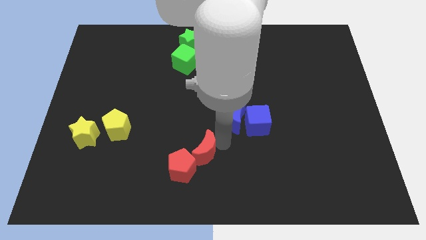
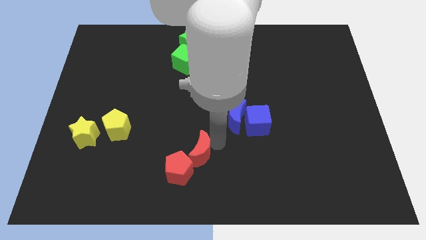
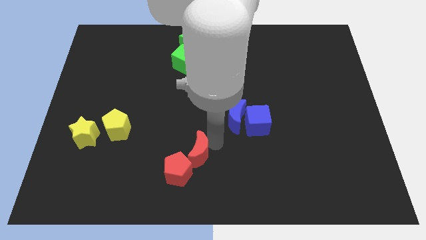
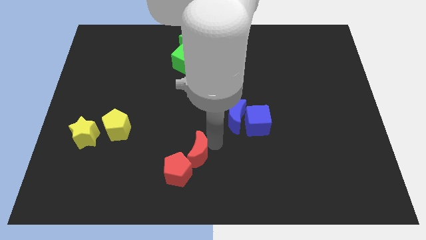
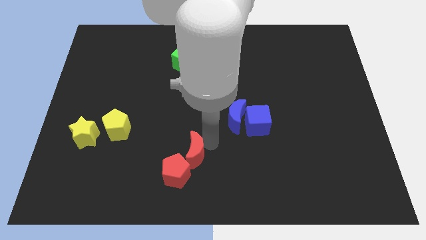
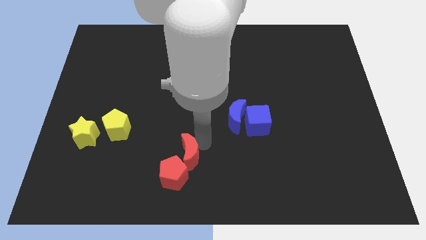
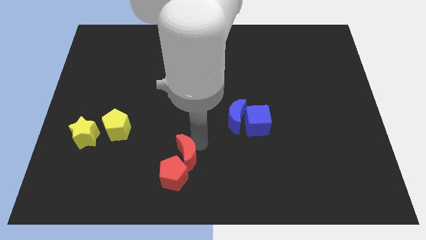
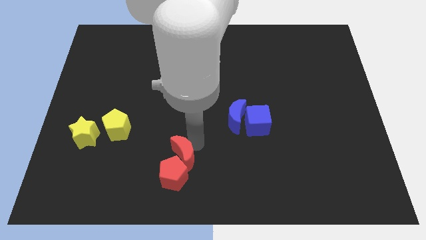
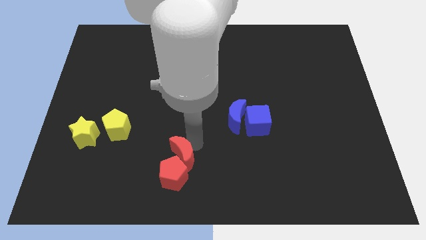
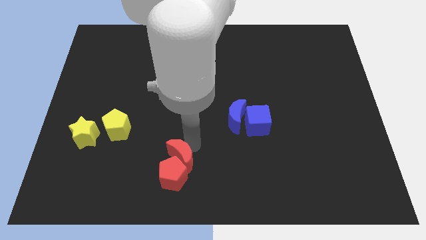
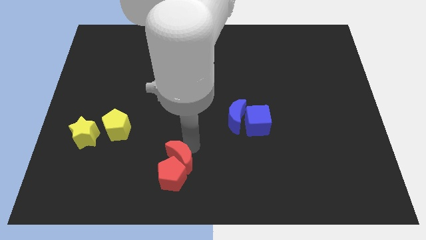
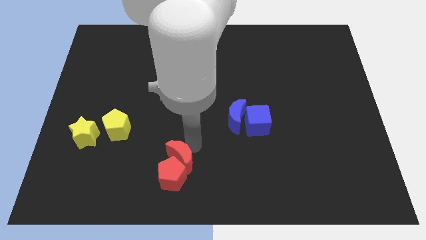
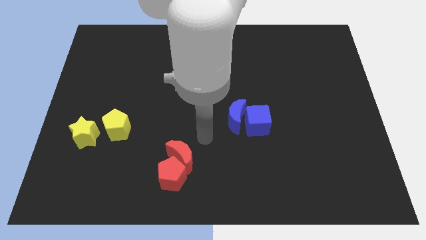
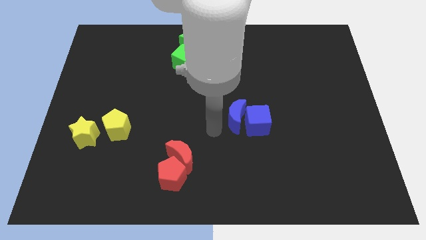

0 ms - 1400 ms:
move the red crescent to the top of the red pentagon

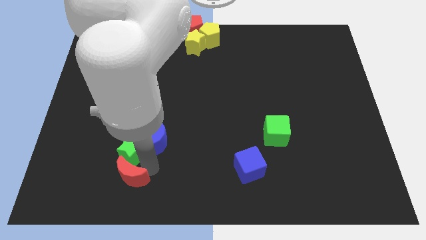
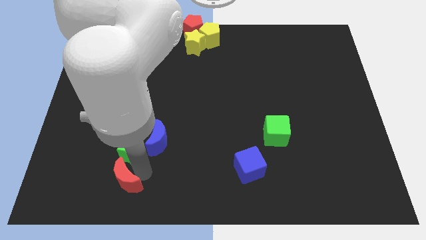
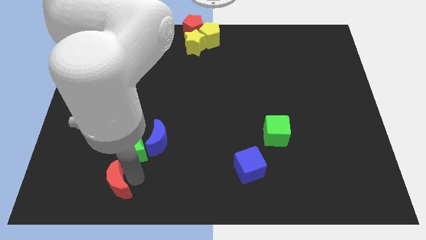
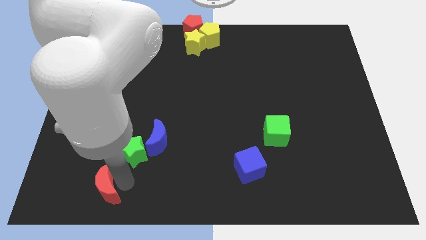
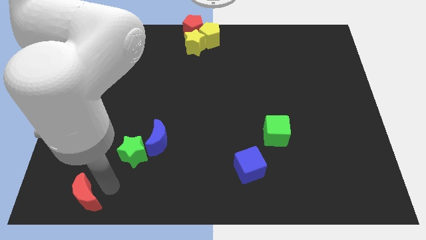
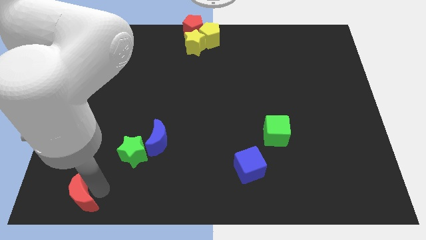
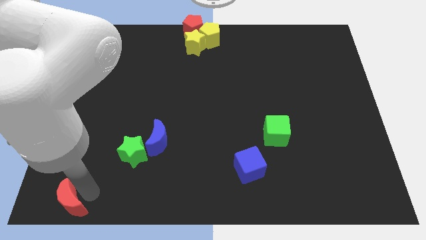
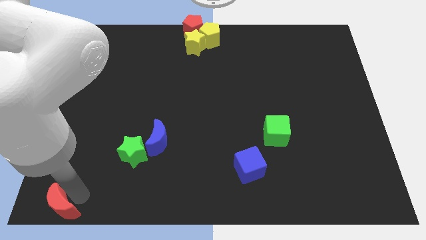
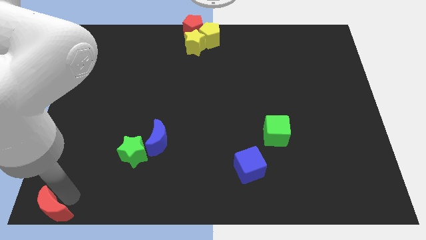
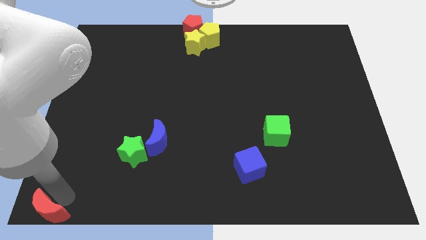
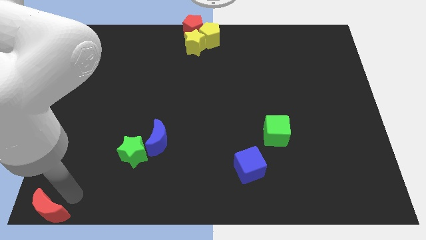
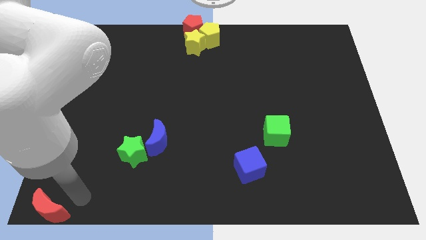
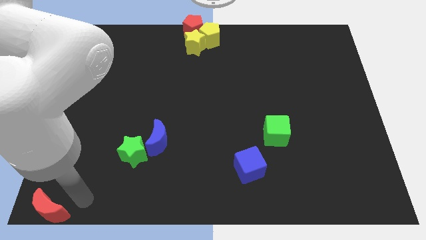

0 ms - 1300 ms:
move red moon apart from the green star

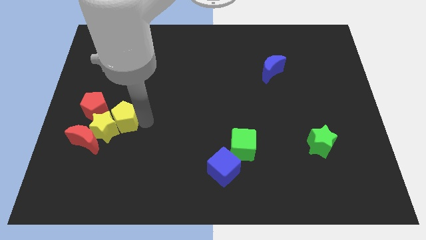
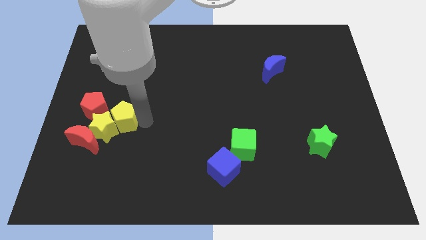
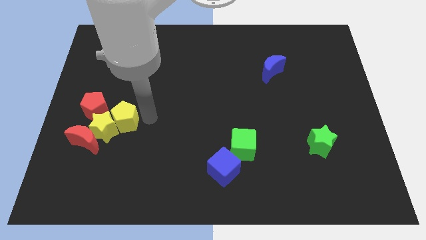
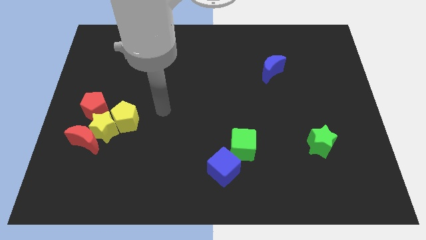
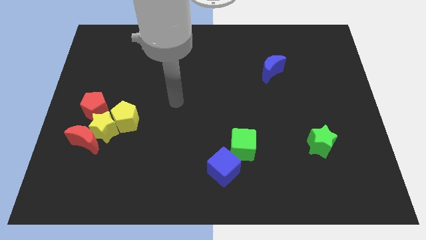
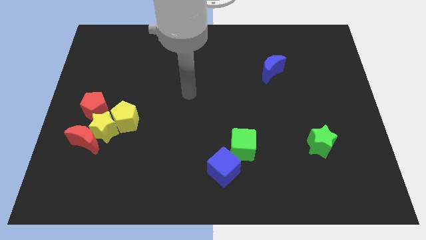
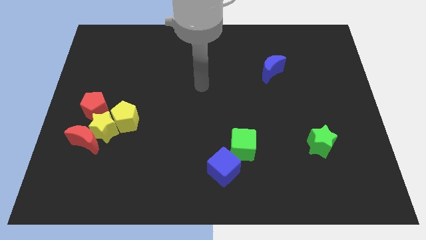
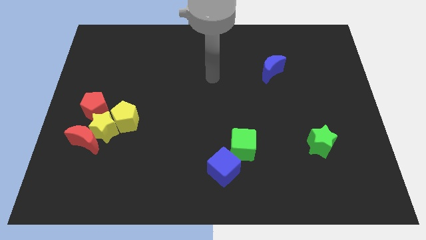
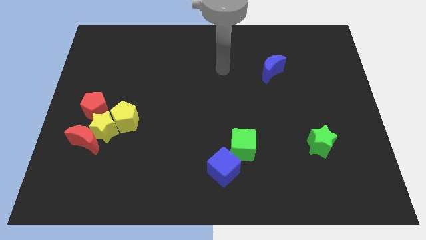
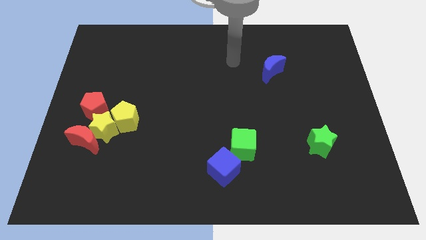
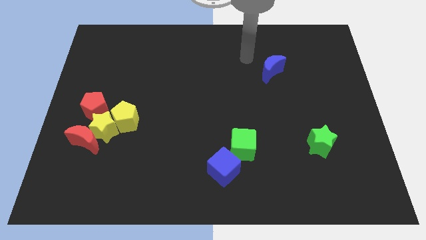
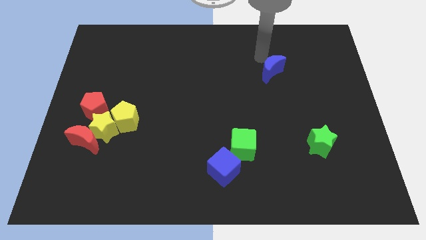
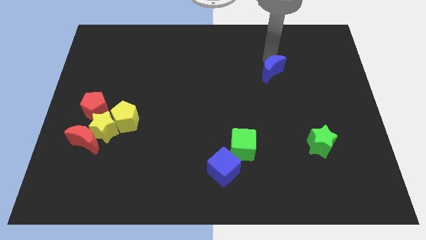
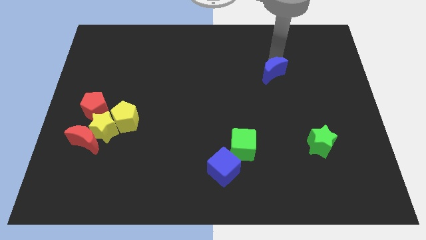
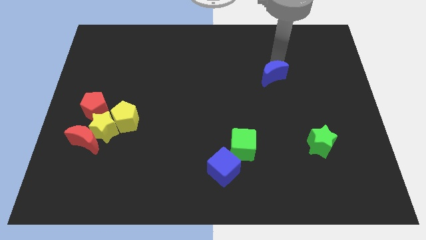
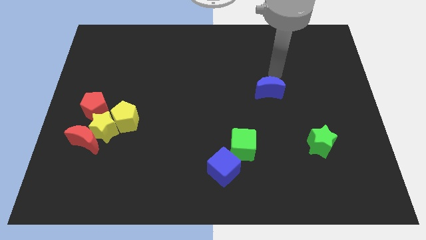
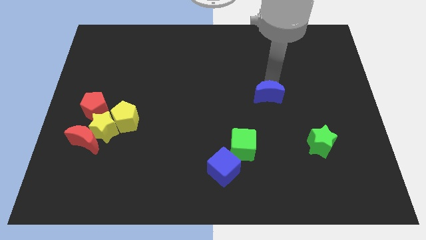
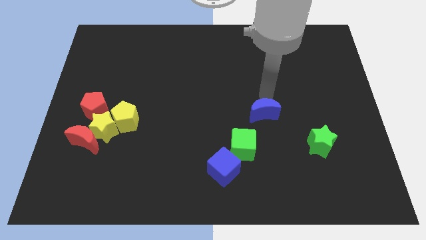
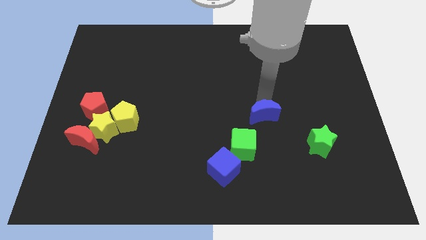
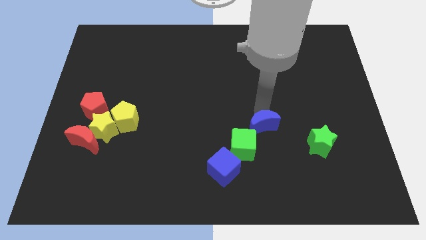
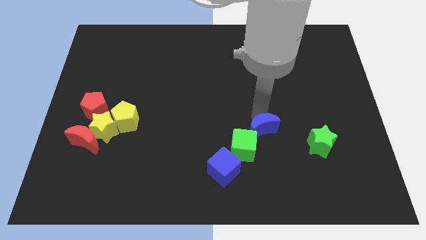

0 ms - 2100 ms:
move the blue crescent towards the top right side of the green cube

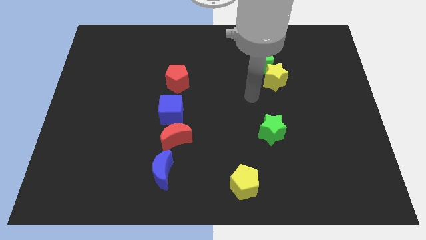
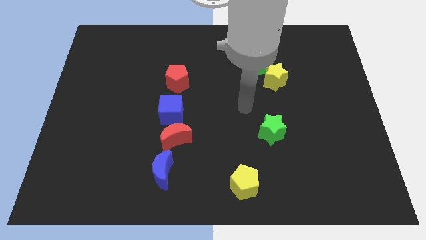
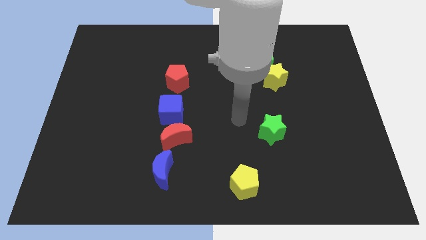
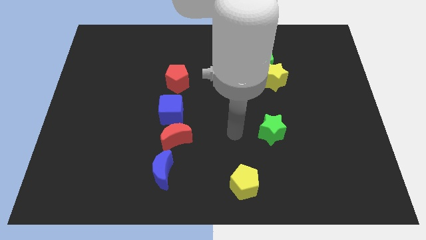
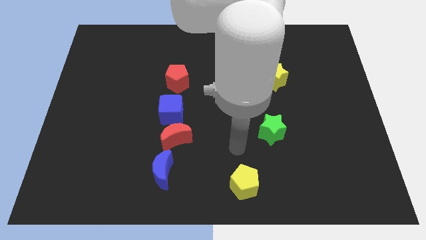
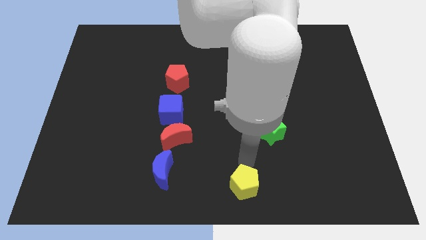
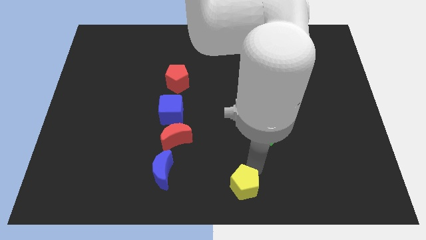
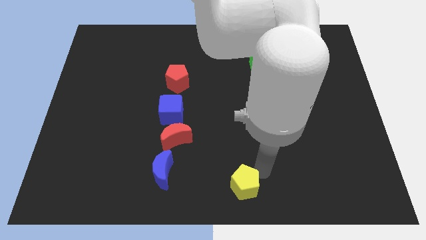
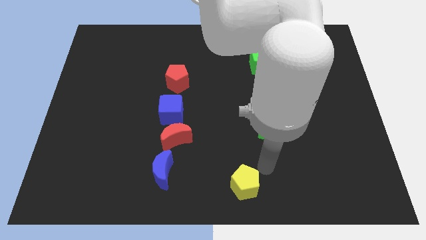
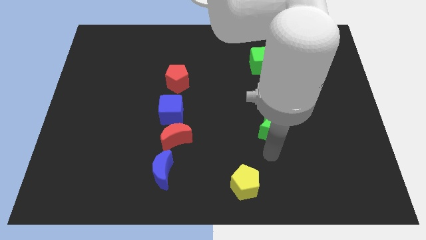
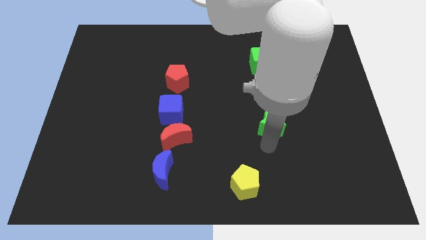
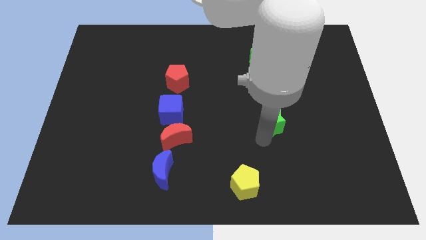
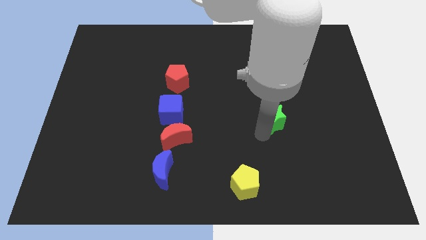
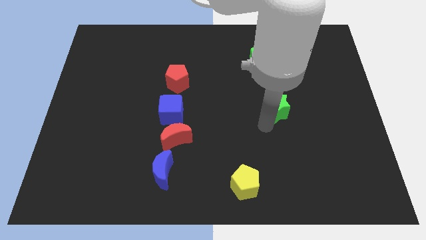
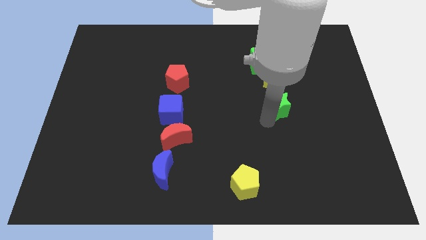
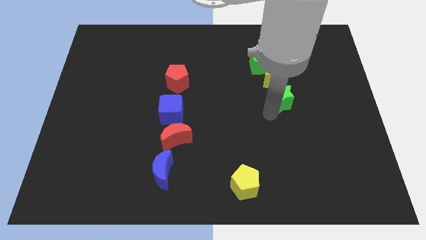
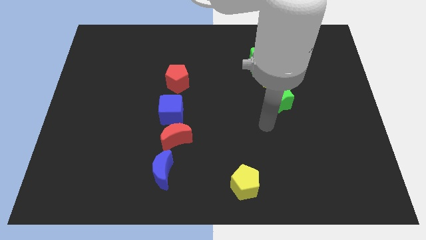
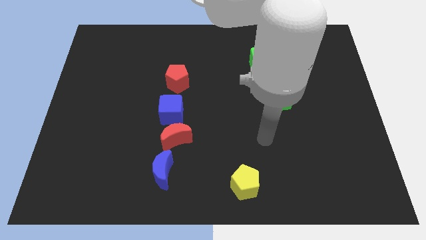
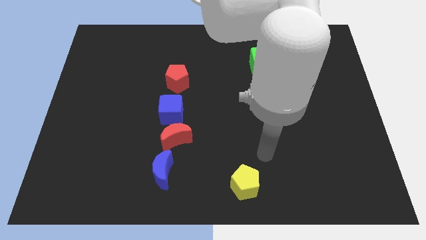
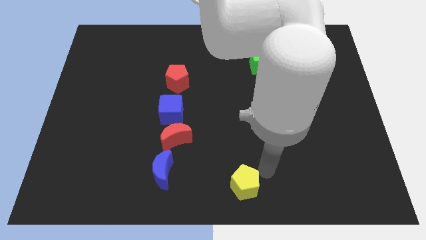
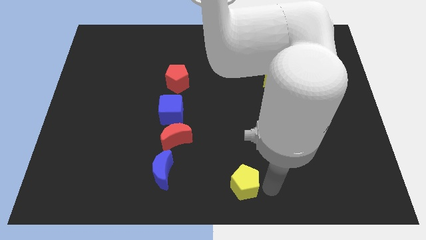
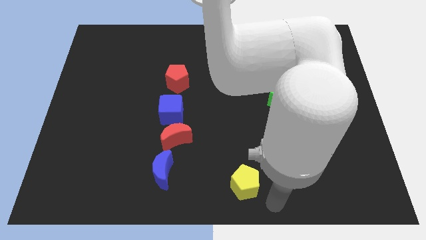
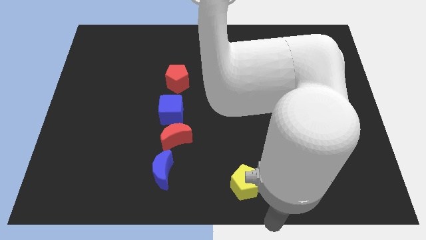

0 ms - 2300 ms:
push the green star to the bottom side of the yellow star

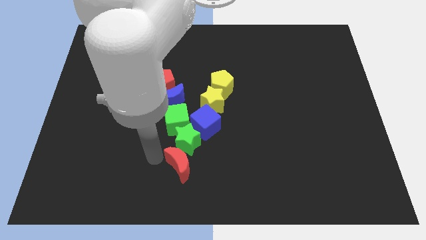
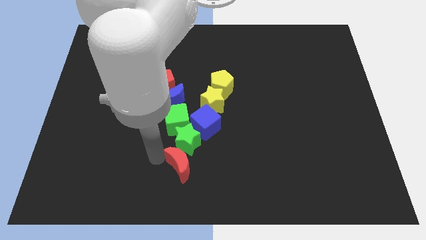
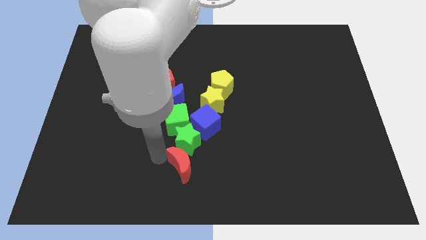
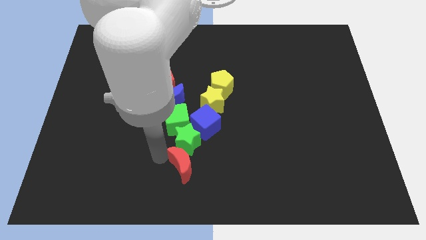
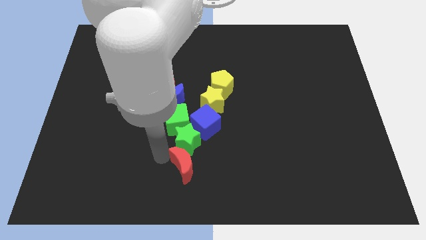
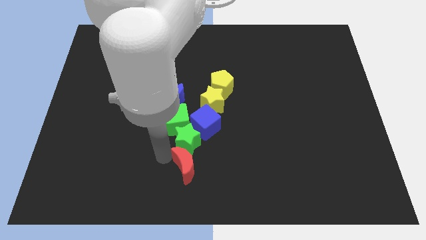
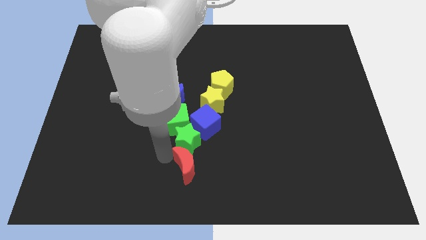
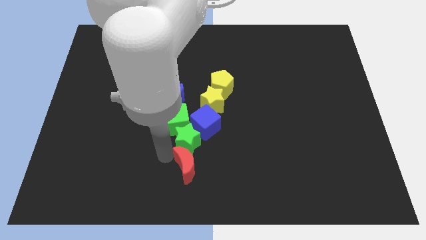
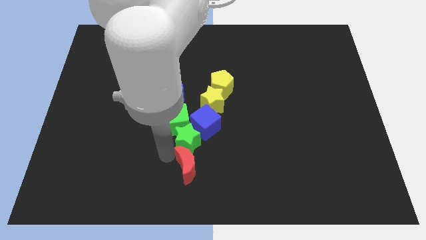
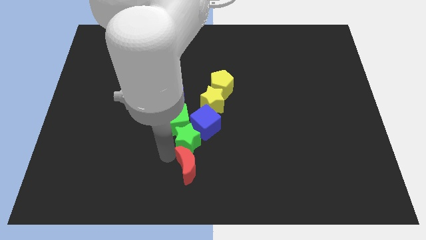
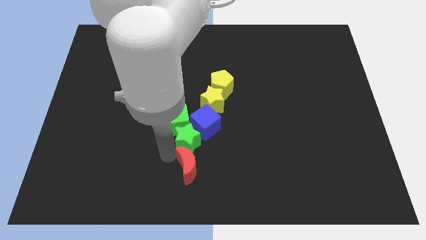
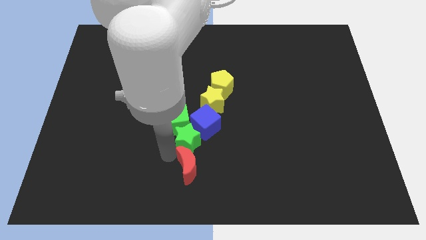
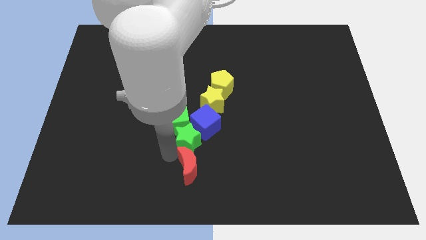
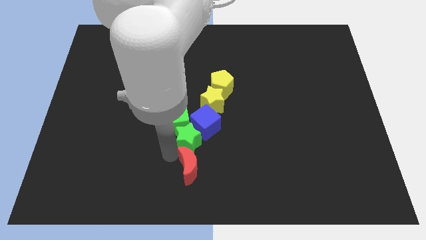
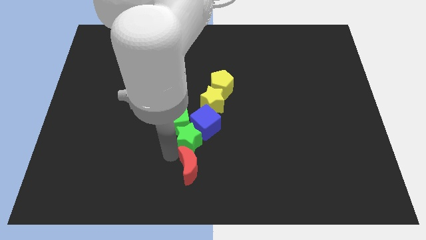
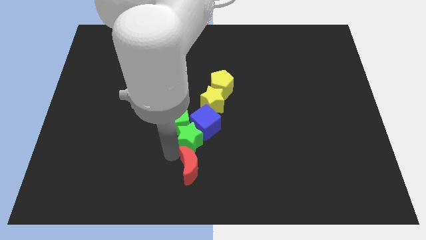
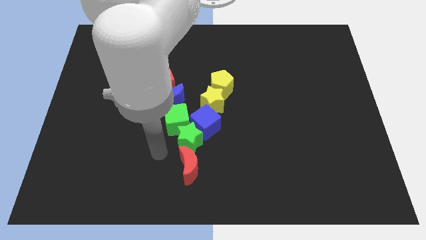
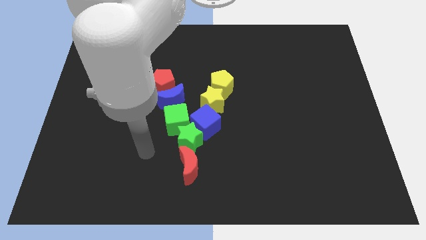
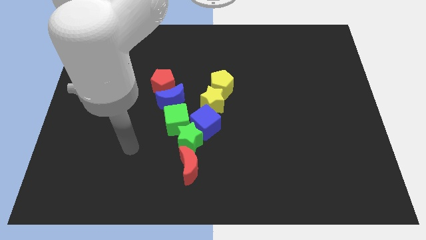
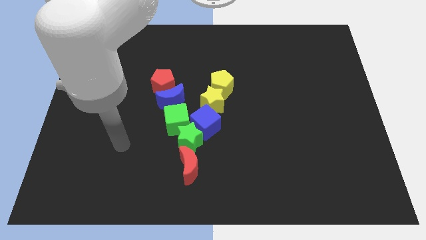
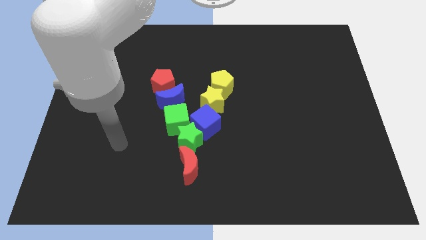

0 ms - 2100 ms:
drag the red moon below the green star
